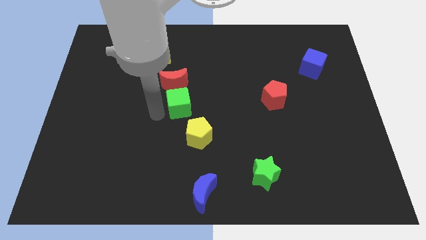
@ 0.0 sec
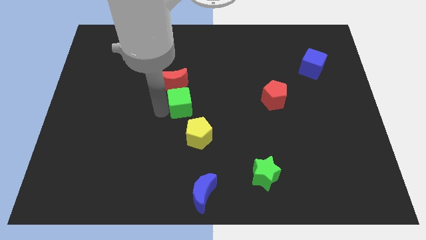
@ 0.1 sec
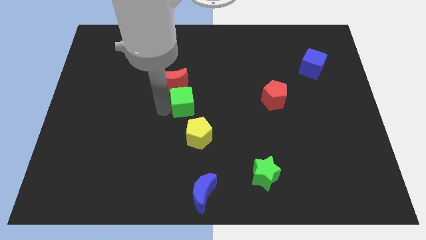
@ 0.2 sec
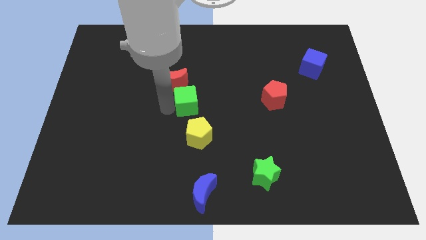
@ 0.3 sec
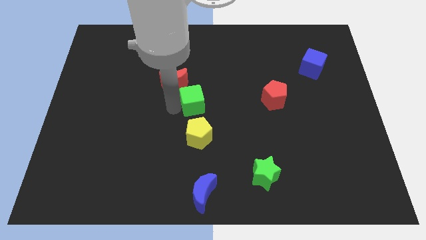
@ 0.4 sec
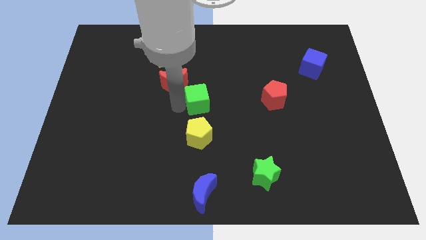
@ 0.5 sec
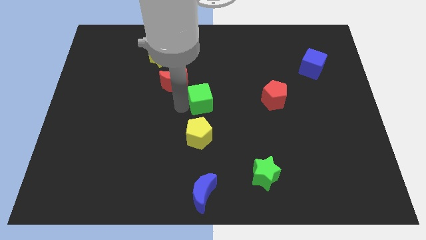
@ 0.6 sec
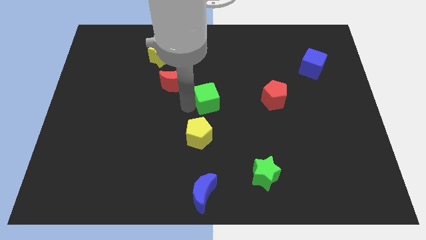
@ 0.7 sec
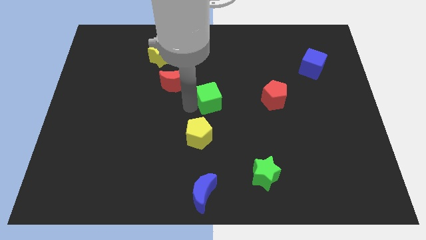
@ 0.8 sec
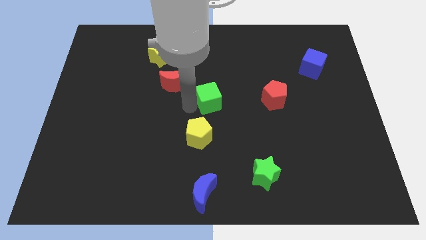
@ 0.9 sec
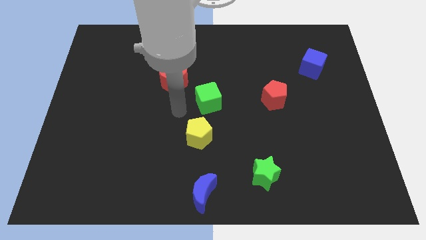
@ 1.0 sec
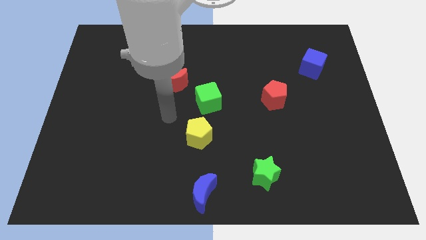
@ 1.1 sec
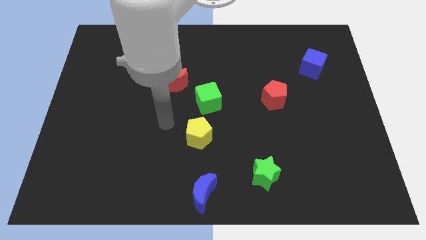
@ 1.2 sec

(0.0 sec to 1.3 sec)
move the green cube slightly to the center of the table

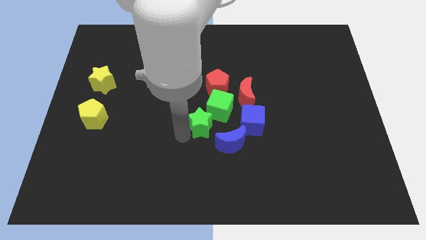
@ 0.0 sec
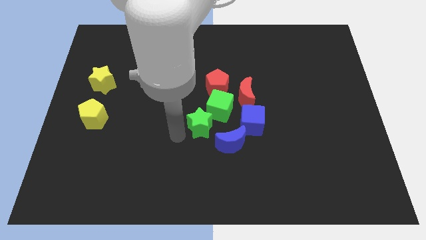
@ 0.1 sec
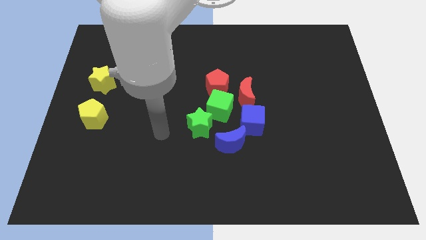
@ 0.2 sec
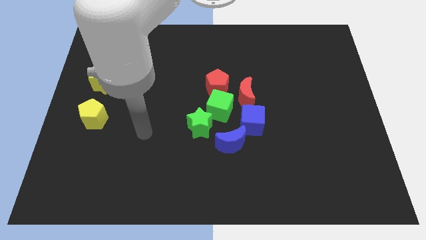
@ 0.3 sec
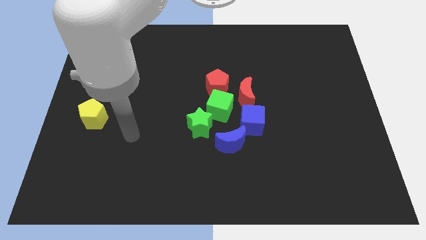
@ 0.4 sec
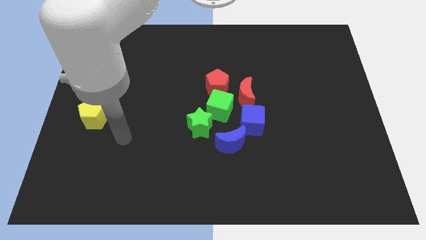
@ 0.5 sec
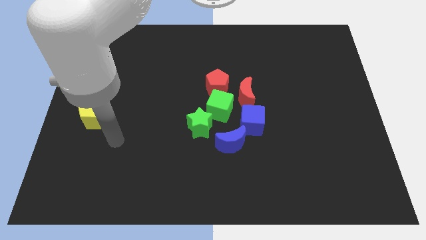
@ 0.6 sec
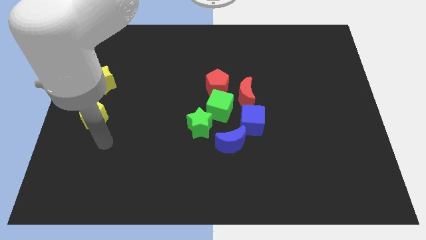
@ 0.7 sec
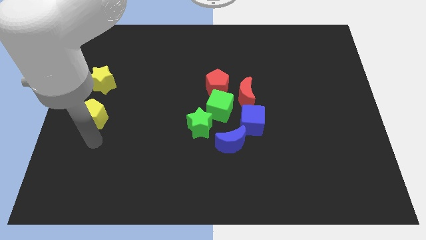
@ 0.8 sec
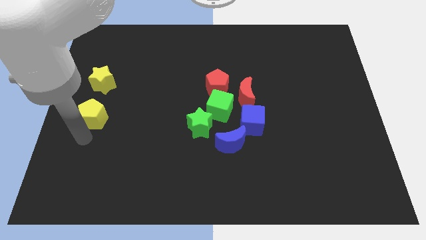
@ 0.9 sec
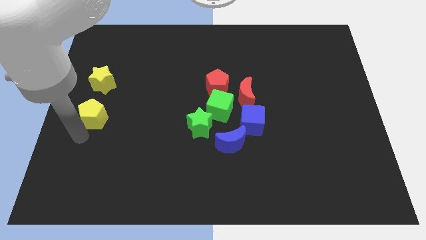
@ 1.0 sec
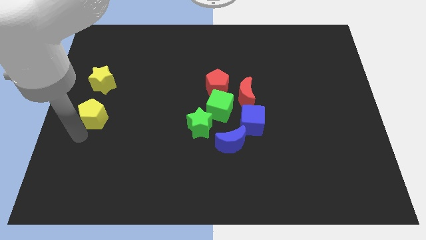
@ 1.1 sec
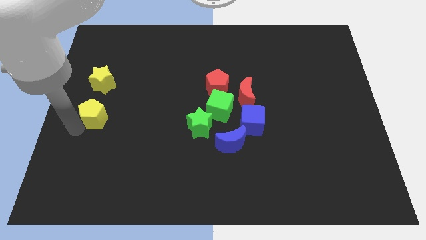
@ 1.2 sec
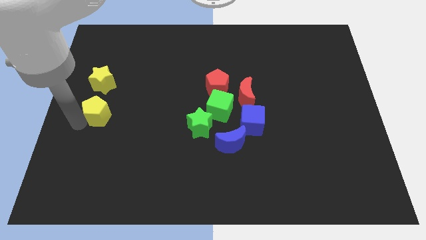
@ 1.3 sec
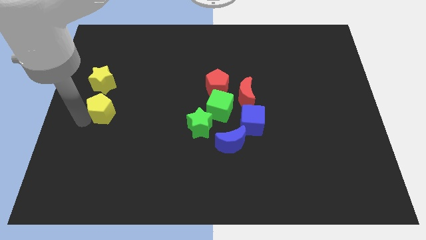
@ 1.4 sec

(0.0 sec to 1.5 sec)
tap the bottom left side of the yellow pentagon

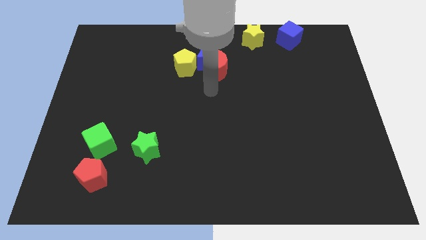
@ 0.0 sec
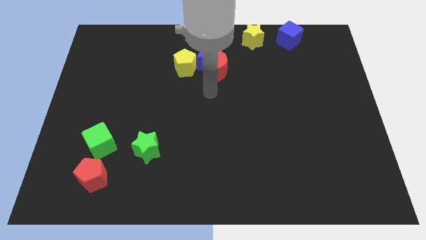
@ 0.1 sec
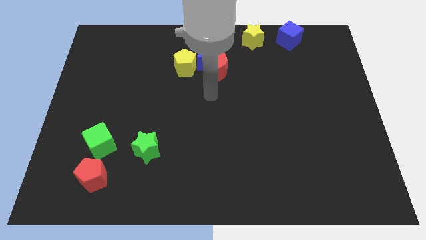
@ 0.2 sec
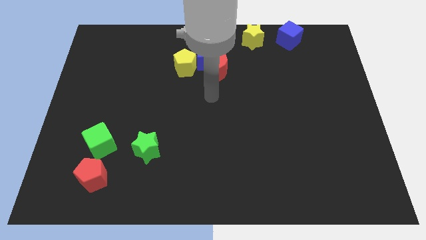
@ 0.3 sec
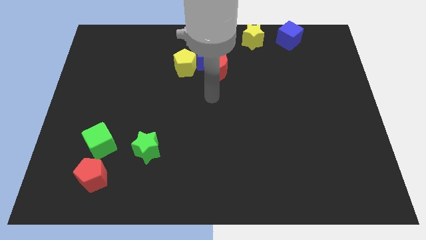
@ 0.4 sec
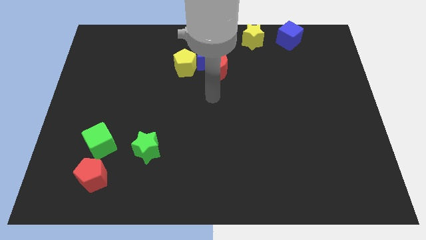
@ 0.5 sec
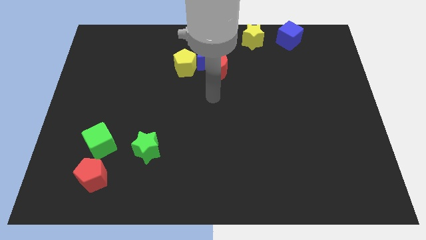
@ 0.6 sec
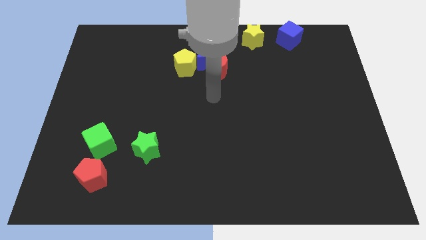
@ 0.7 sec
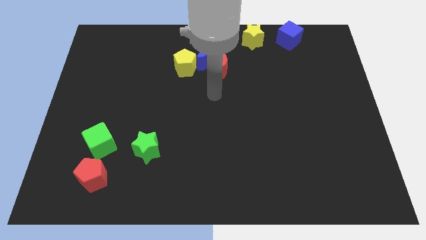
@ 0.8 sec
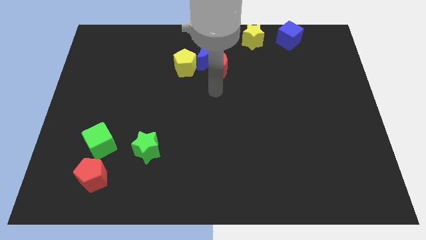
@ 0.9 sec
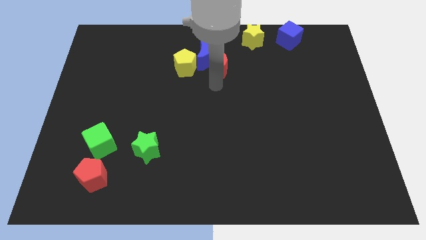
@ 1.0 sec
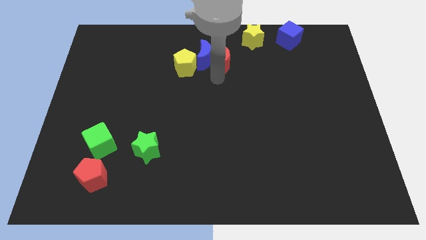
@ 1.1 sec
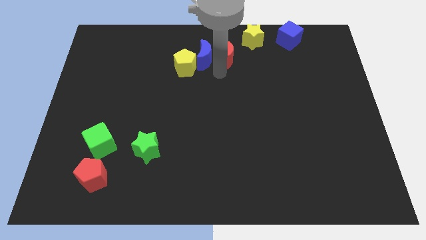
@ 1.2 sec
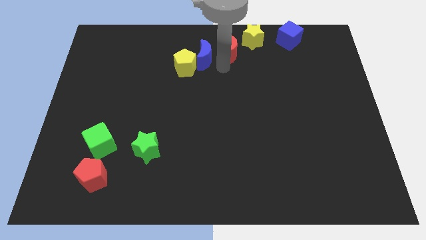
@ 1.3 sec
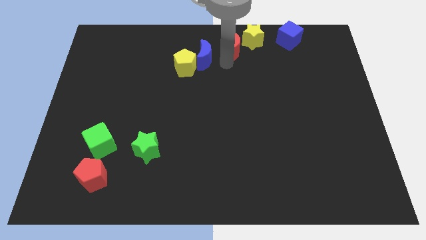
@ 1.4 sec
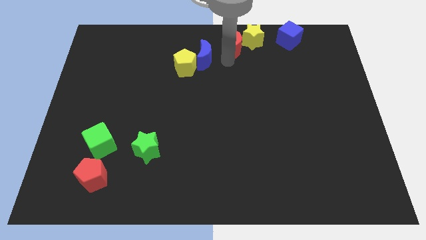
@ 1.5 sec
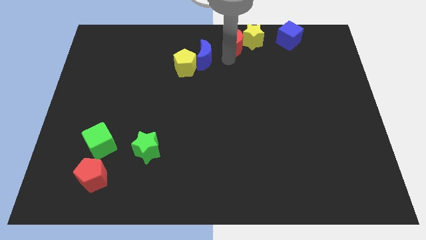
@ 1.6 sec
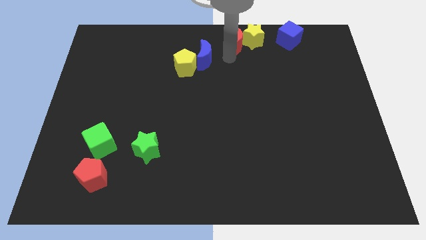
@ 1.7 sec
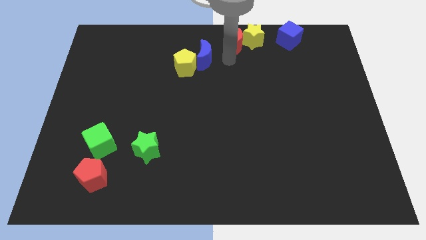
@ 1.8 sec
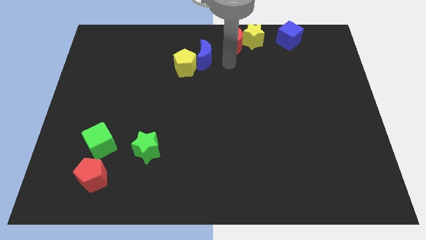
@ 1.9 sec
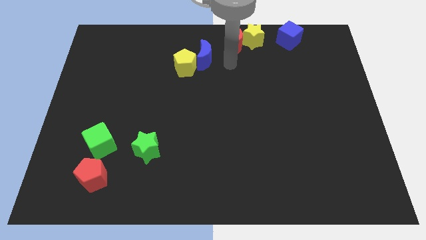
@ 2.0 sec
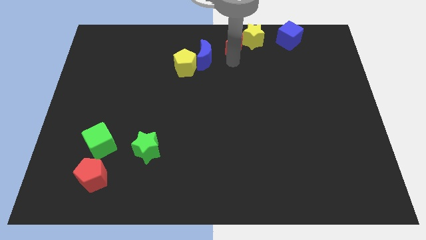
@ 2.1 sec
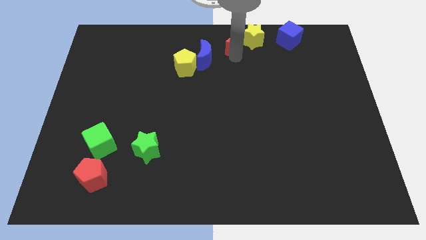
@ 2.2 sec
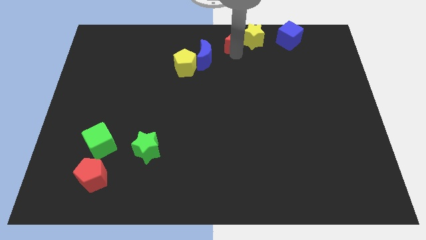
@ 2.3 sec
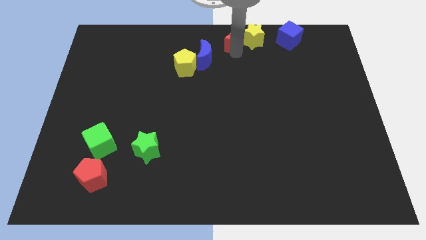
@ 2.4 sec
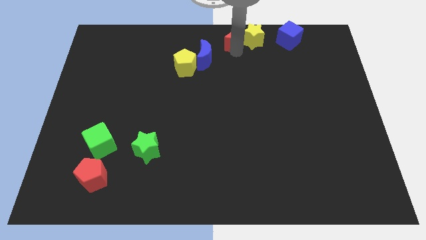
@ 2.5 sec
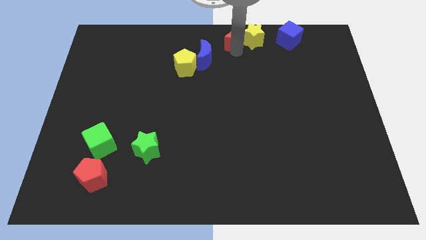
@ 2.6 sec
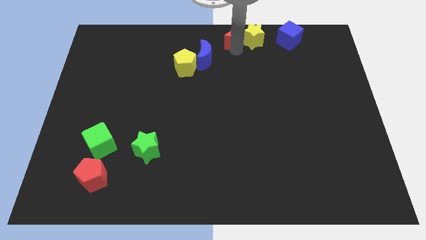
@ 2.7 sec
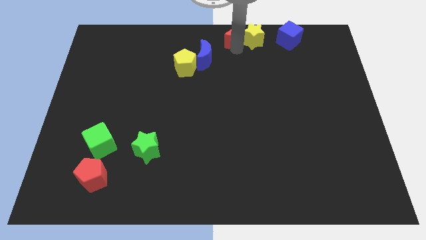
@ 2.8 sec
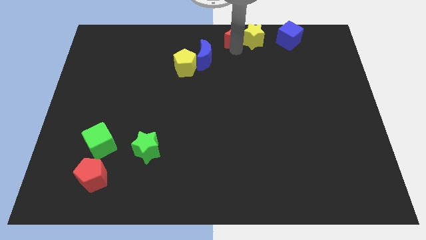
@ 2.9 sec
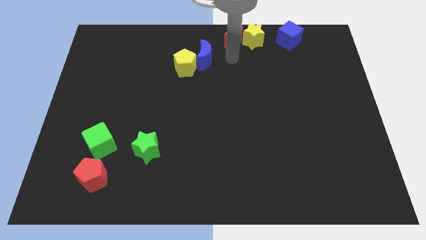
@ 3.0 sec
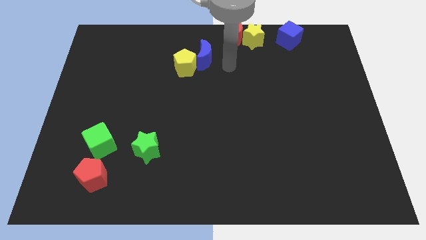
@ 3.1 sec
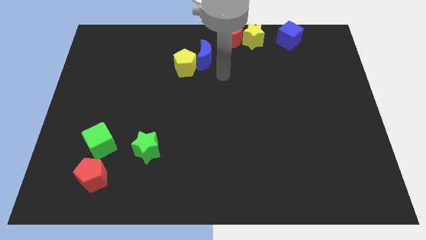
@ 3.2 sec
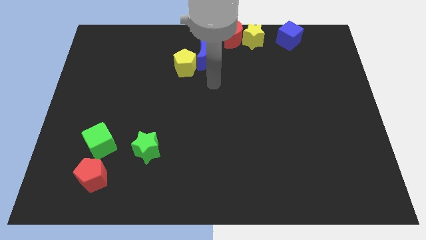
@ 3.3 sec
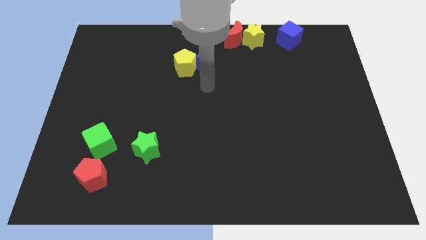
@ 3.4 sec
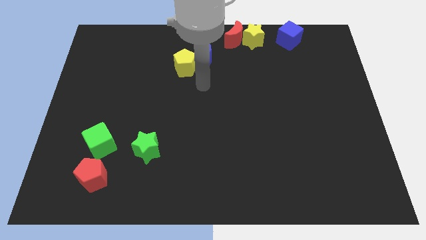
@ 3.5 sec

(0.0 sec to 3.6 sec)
move the red crescent left to the yellow star

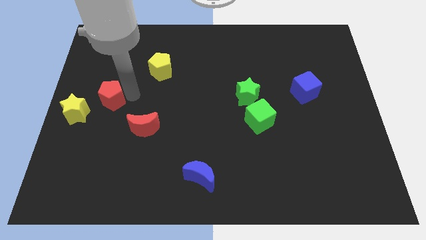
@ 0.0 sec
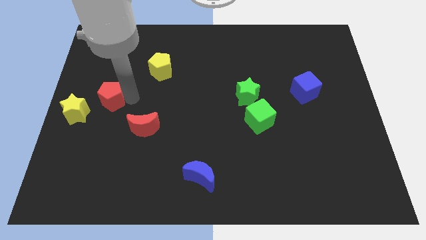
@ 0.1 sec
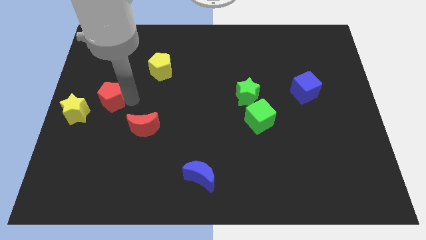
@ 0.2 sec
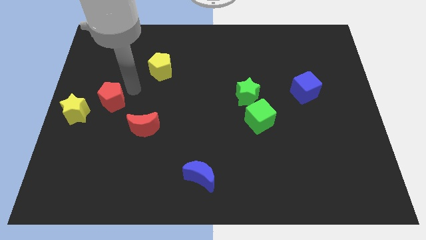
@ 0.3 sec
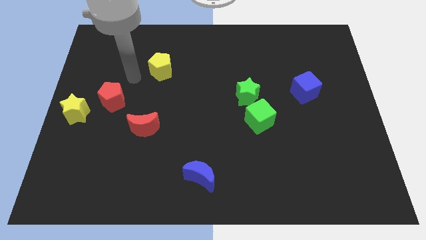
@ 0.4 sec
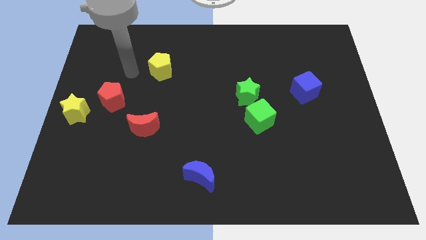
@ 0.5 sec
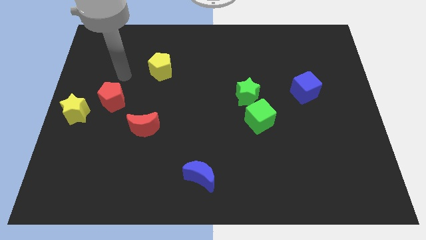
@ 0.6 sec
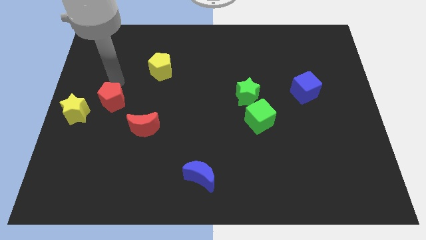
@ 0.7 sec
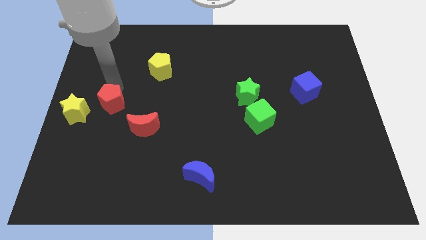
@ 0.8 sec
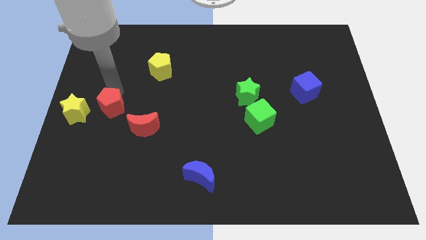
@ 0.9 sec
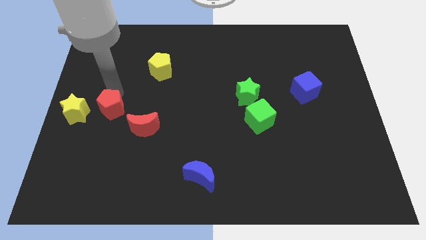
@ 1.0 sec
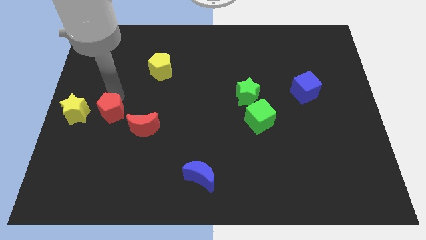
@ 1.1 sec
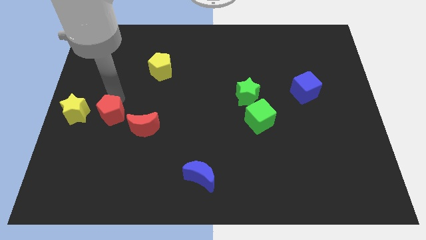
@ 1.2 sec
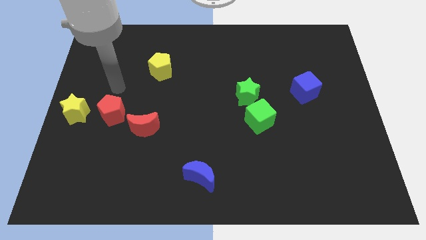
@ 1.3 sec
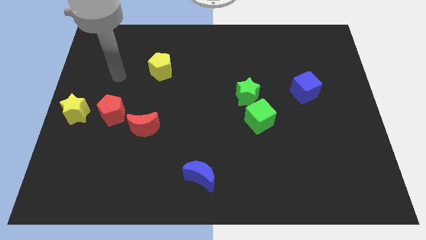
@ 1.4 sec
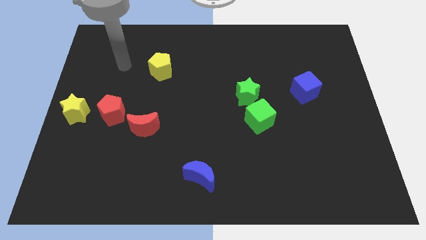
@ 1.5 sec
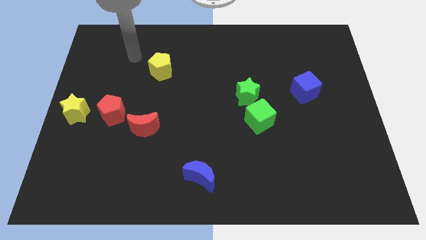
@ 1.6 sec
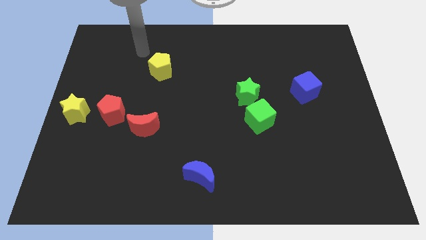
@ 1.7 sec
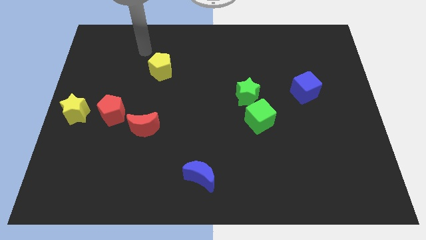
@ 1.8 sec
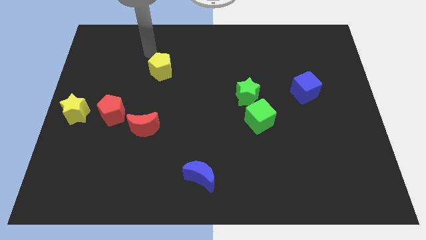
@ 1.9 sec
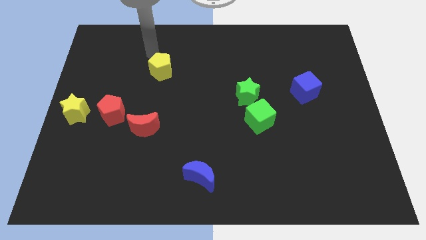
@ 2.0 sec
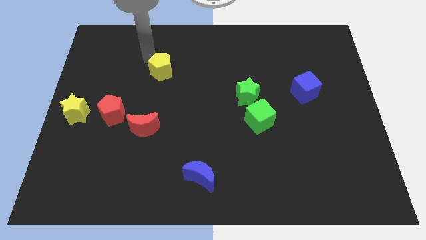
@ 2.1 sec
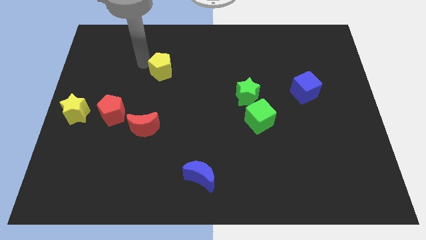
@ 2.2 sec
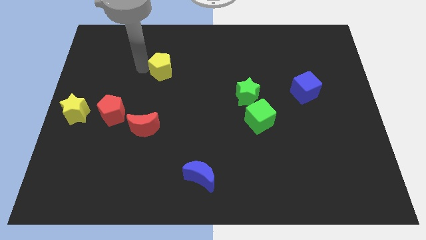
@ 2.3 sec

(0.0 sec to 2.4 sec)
move the red pentagon to the right of the yellow star

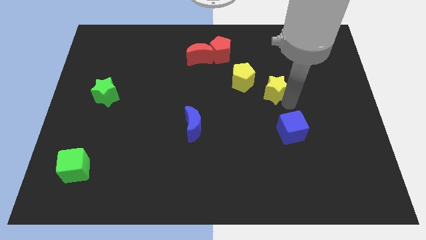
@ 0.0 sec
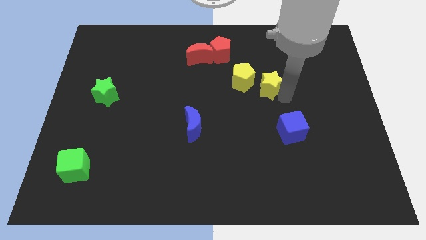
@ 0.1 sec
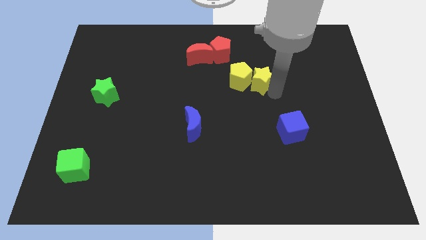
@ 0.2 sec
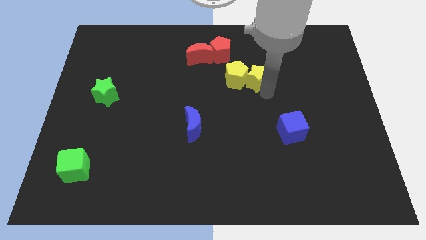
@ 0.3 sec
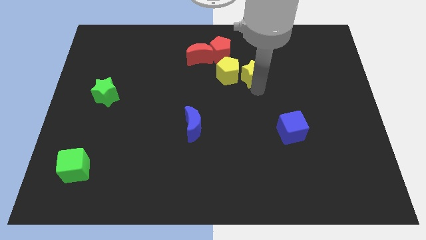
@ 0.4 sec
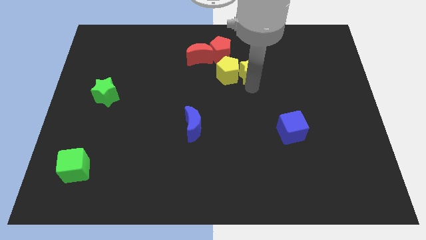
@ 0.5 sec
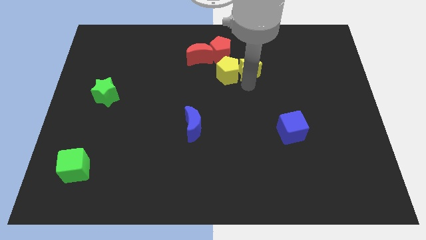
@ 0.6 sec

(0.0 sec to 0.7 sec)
push the yellow star into the yellow pentagon
